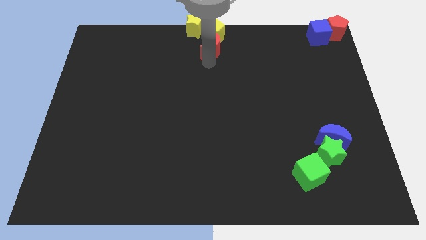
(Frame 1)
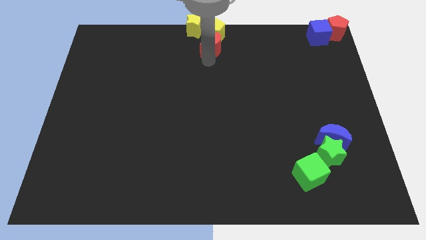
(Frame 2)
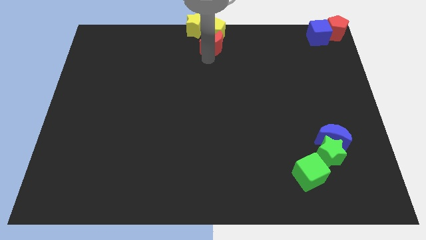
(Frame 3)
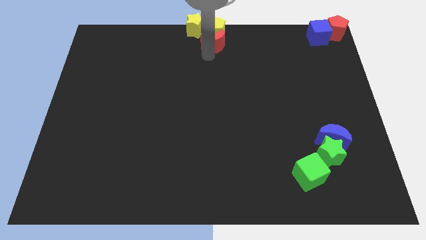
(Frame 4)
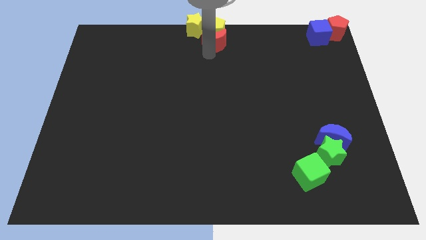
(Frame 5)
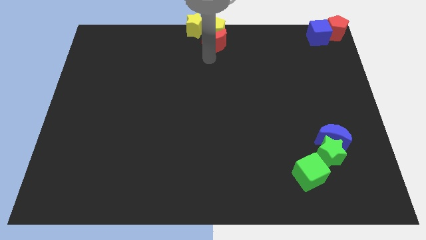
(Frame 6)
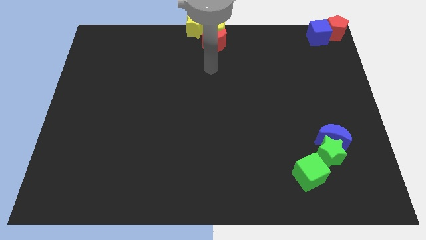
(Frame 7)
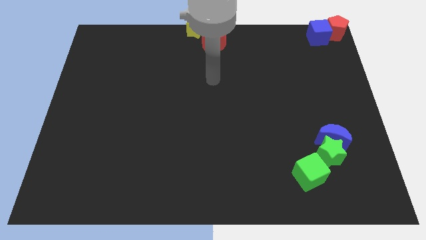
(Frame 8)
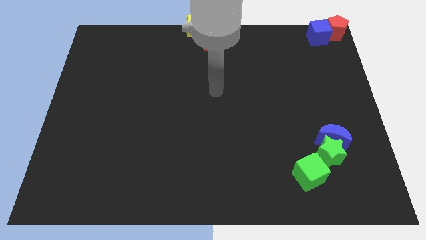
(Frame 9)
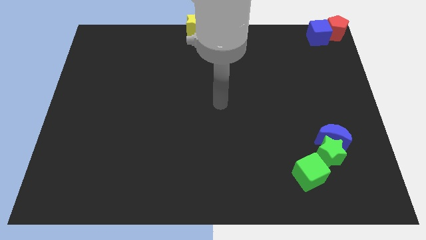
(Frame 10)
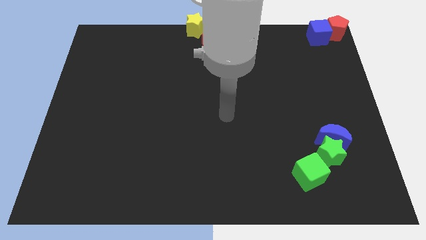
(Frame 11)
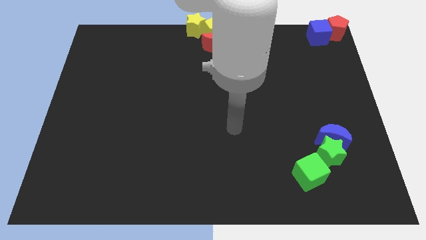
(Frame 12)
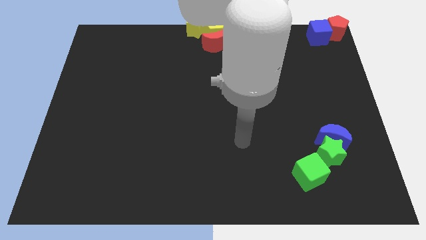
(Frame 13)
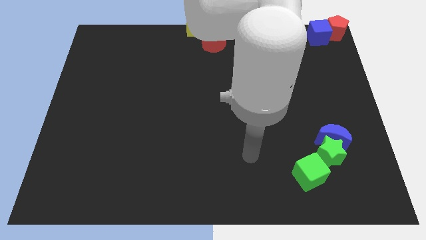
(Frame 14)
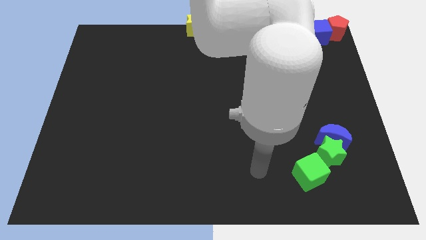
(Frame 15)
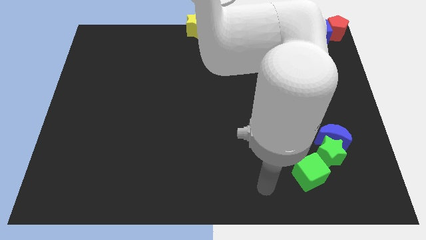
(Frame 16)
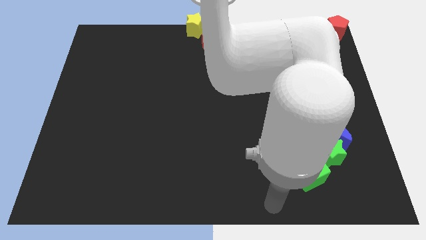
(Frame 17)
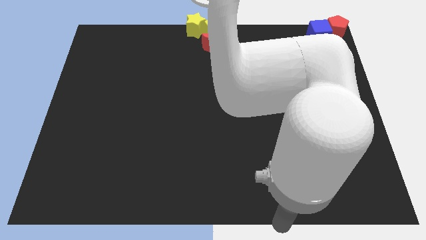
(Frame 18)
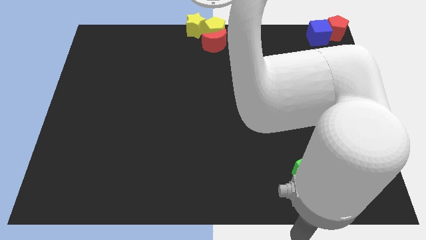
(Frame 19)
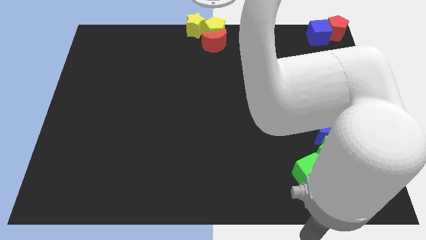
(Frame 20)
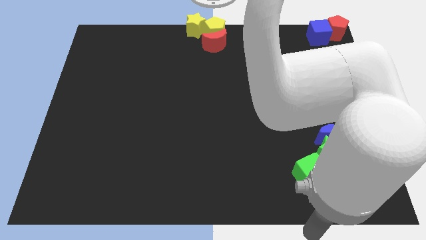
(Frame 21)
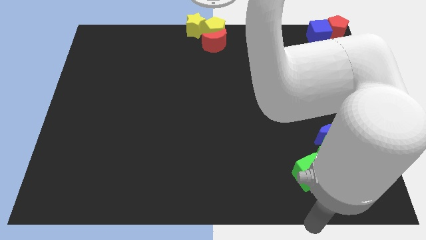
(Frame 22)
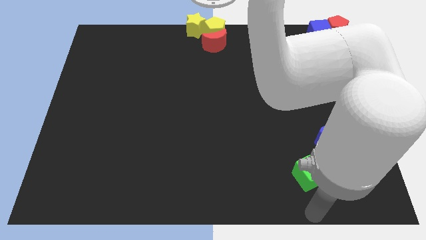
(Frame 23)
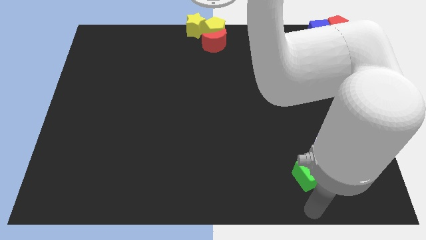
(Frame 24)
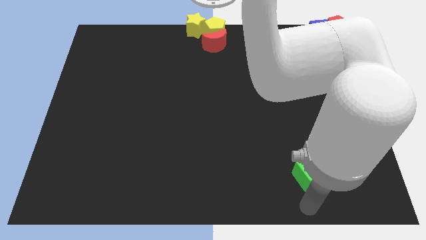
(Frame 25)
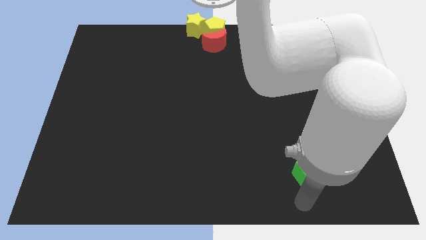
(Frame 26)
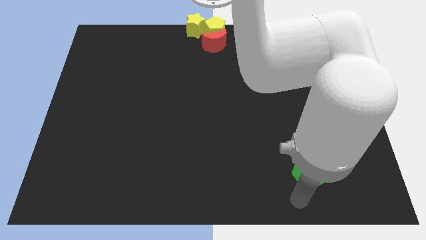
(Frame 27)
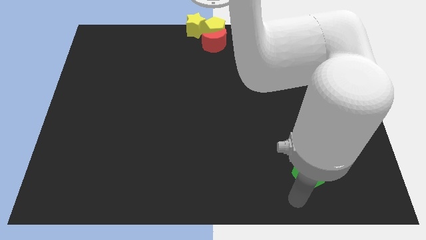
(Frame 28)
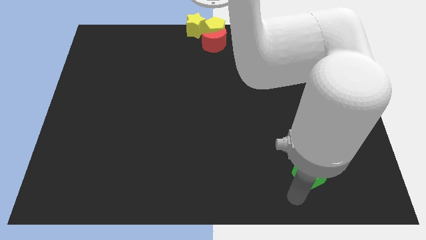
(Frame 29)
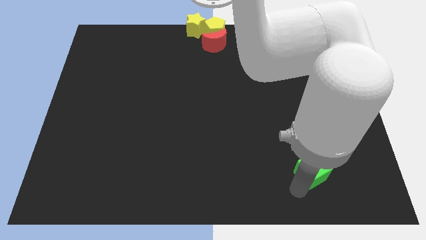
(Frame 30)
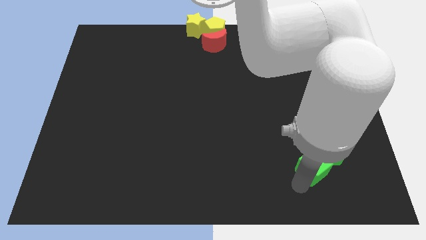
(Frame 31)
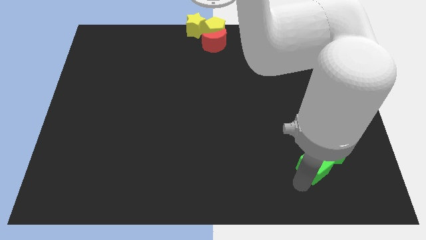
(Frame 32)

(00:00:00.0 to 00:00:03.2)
move your arm to the bottom of the green cube

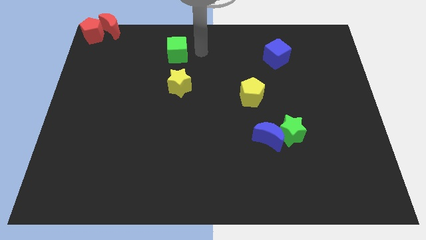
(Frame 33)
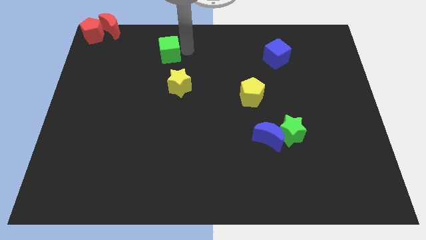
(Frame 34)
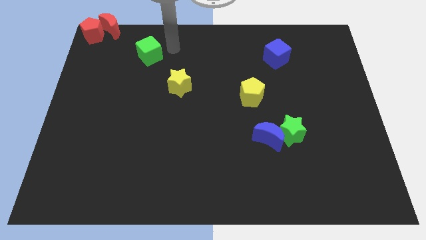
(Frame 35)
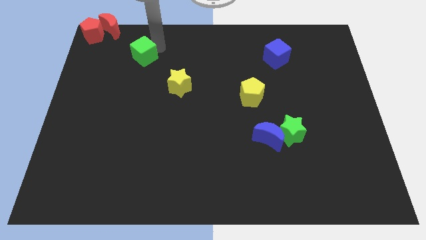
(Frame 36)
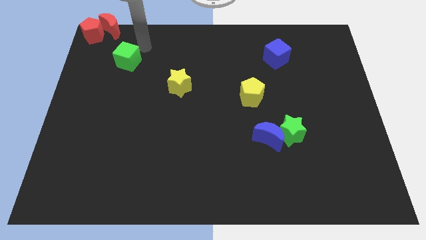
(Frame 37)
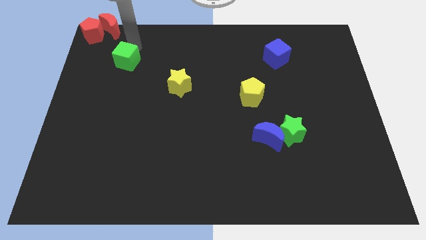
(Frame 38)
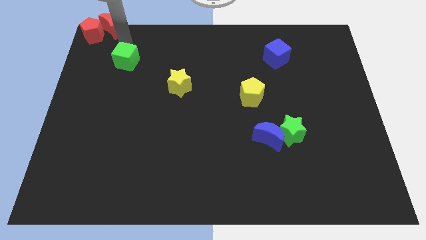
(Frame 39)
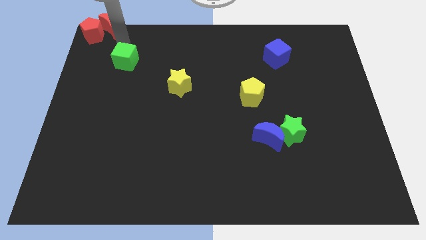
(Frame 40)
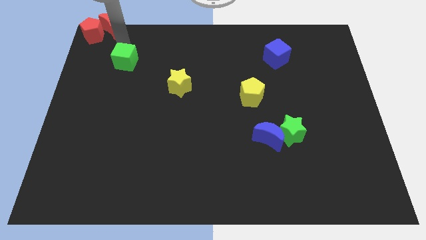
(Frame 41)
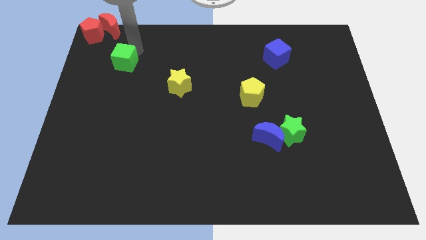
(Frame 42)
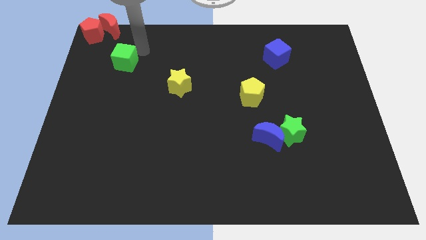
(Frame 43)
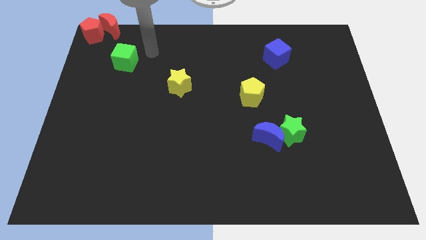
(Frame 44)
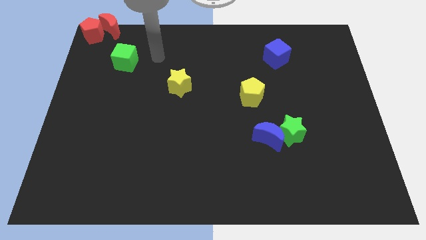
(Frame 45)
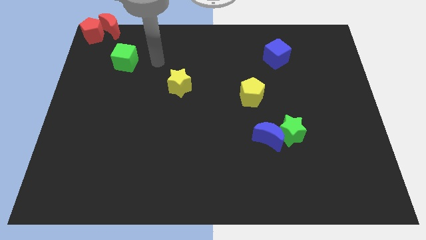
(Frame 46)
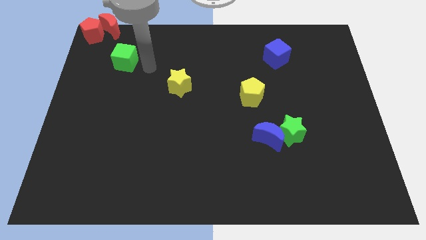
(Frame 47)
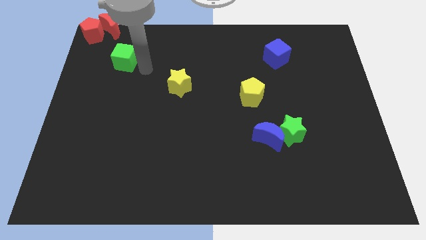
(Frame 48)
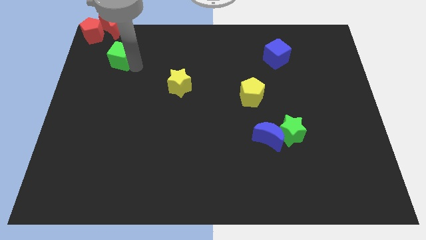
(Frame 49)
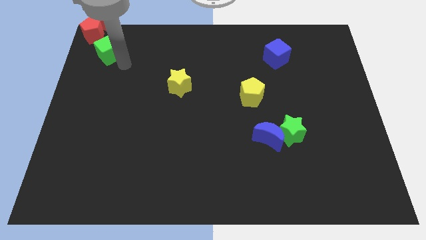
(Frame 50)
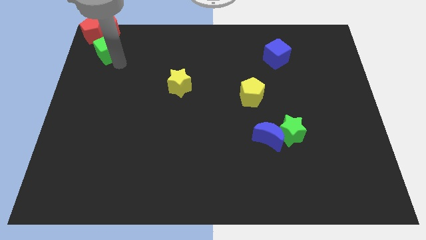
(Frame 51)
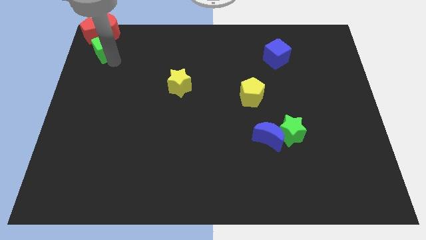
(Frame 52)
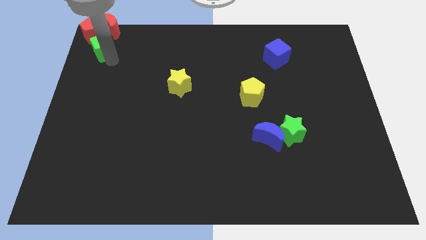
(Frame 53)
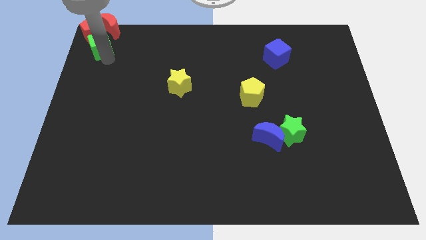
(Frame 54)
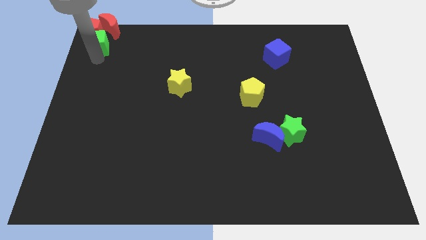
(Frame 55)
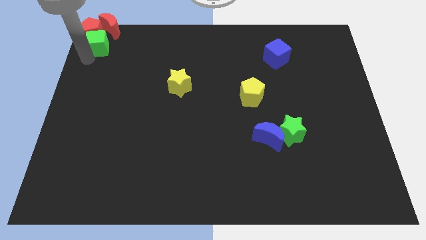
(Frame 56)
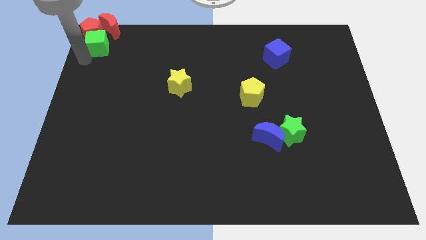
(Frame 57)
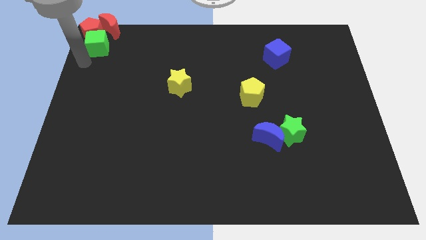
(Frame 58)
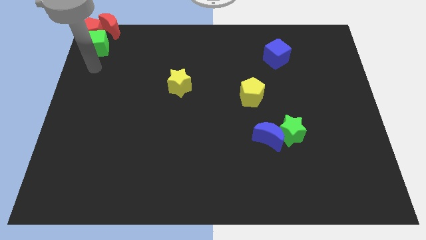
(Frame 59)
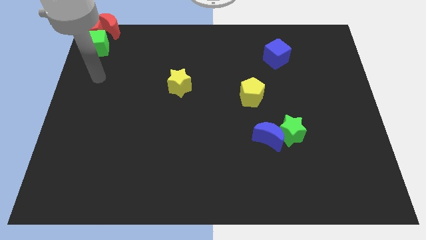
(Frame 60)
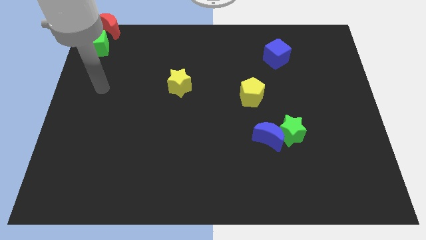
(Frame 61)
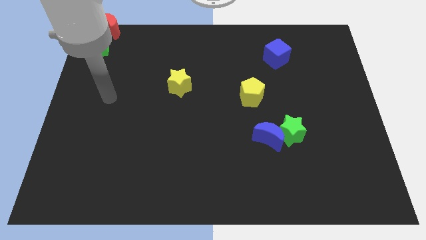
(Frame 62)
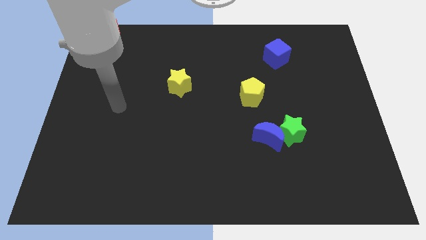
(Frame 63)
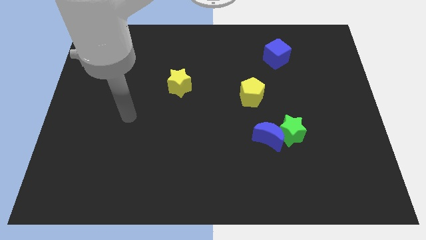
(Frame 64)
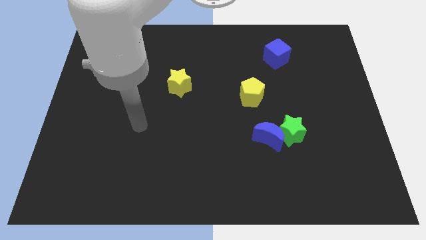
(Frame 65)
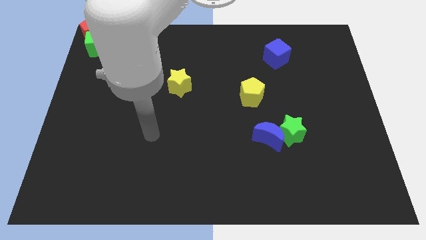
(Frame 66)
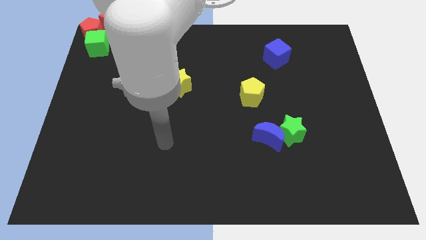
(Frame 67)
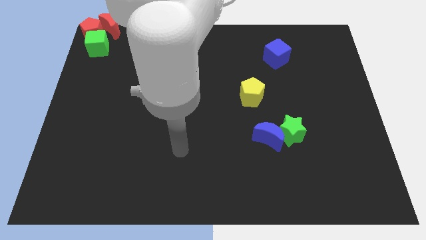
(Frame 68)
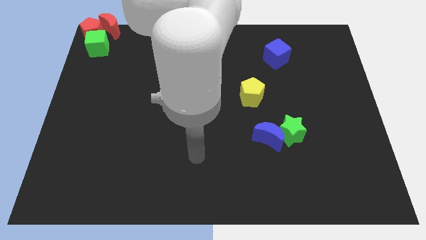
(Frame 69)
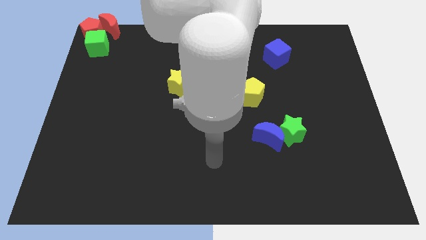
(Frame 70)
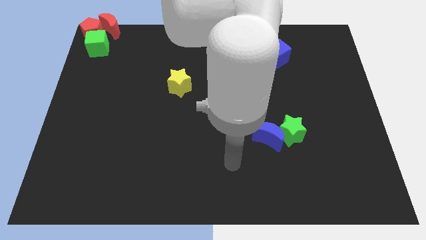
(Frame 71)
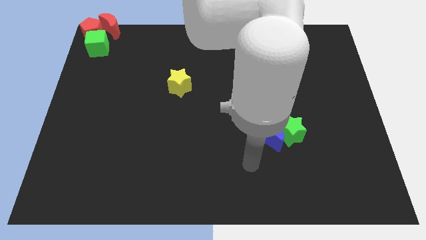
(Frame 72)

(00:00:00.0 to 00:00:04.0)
move green cube into the red pentagon

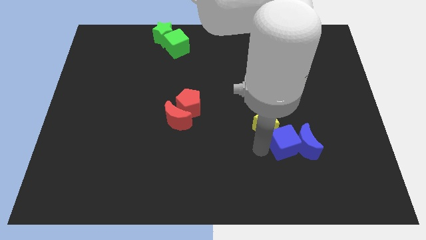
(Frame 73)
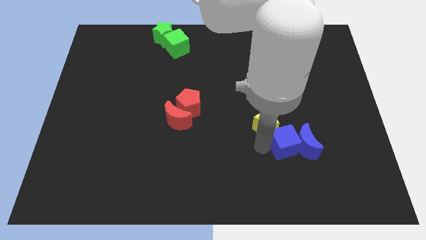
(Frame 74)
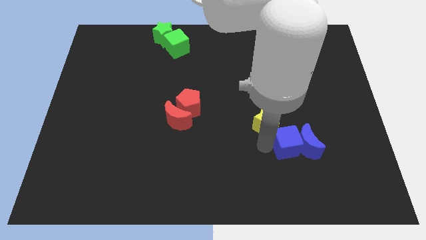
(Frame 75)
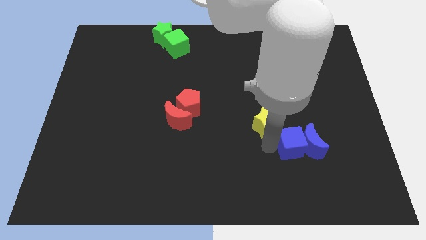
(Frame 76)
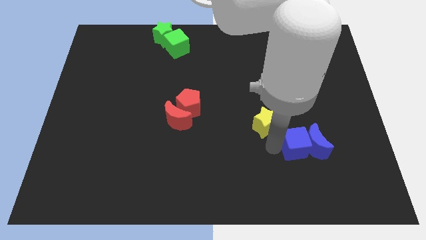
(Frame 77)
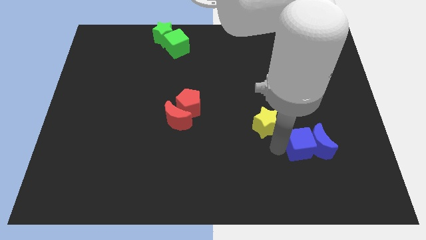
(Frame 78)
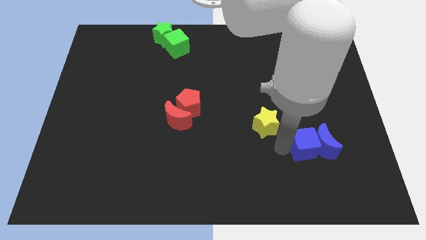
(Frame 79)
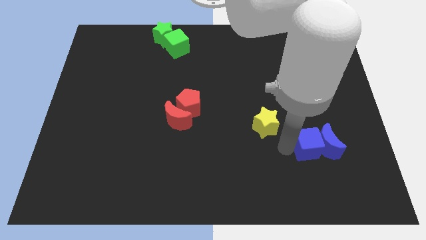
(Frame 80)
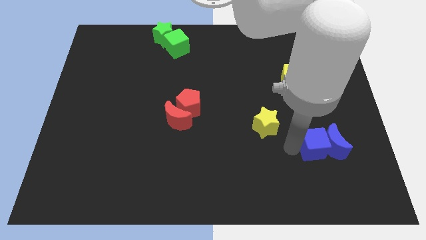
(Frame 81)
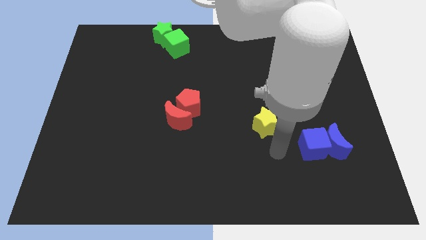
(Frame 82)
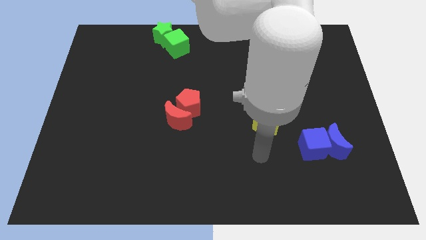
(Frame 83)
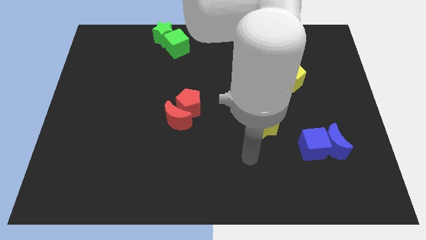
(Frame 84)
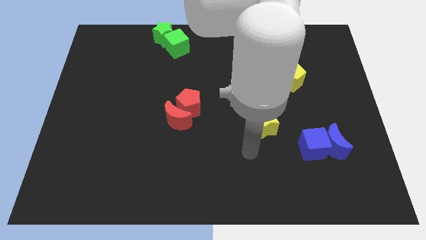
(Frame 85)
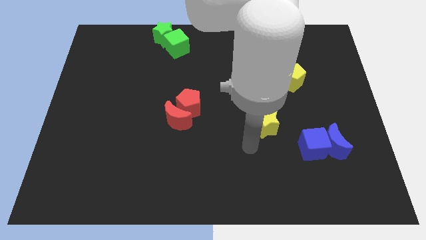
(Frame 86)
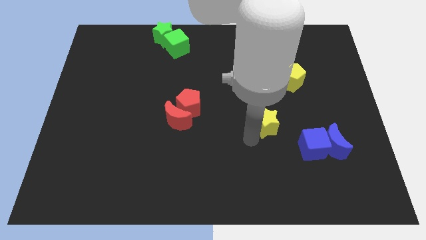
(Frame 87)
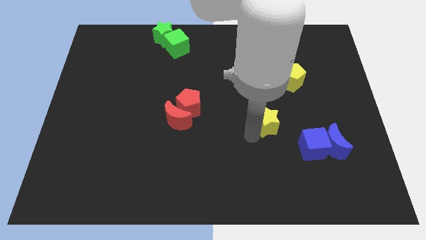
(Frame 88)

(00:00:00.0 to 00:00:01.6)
push the group of blue blocks away from the yellow star
